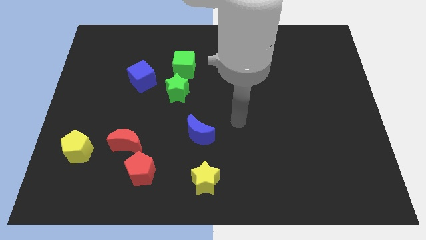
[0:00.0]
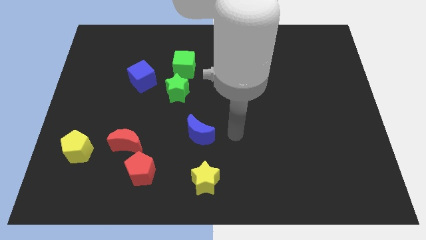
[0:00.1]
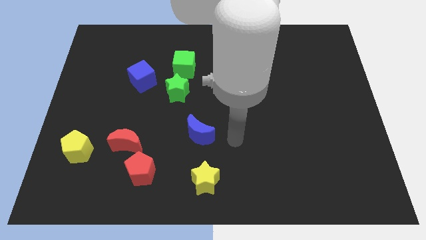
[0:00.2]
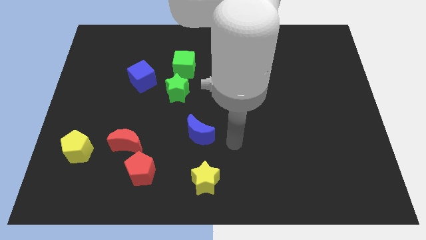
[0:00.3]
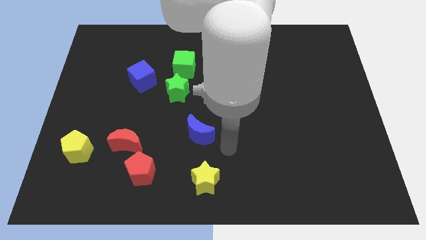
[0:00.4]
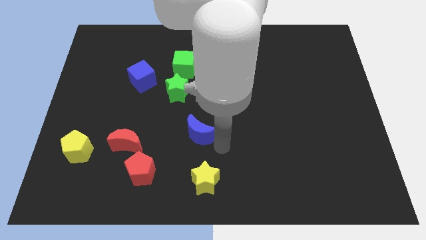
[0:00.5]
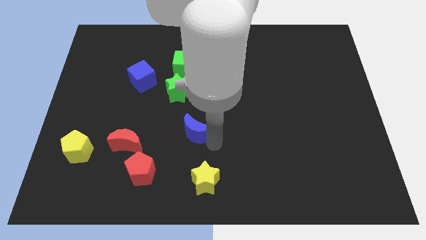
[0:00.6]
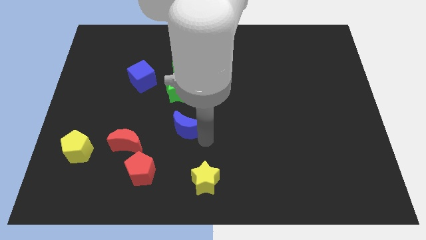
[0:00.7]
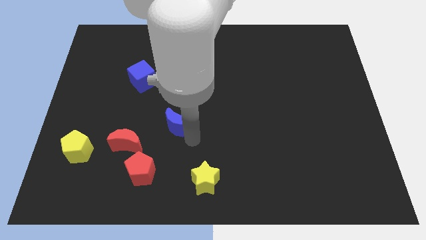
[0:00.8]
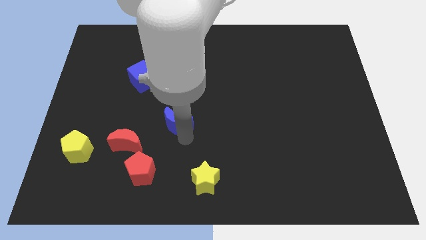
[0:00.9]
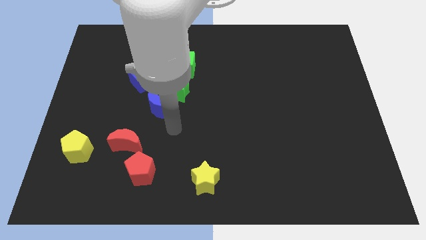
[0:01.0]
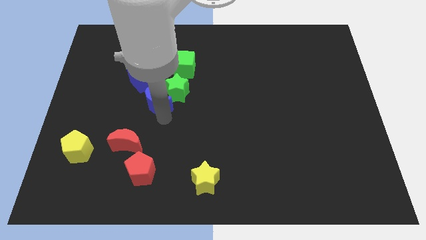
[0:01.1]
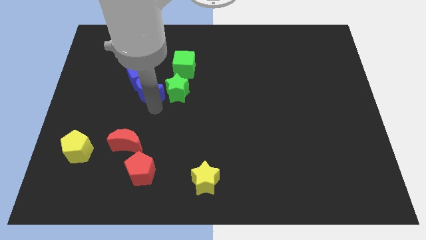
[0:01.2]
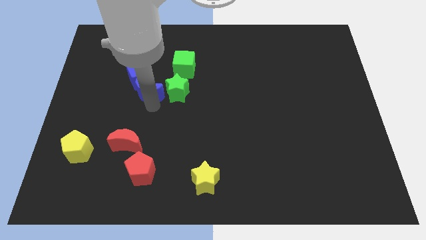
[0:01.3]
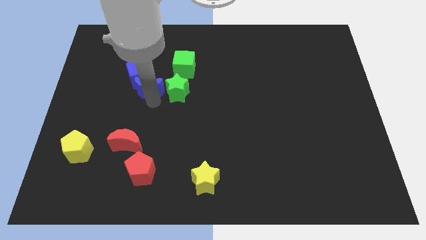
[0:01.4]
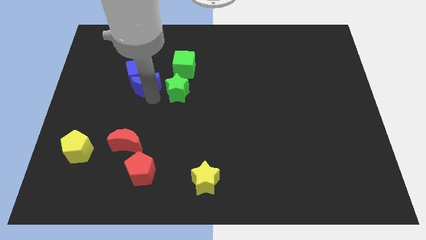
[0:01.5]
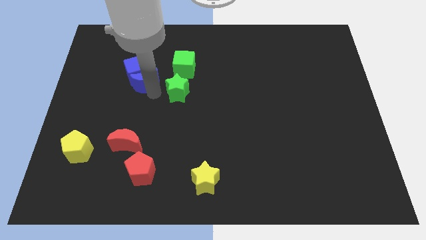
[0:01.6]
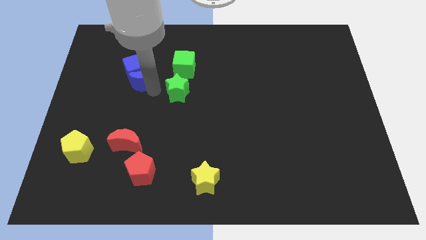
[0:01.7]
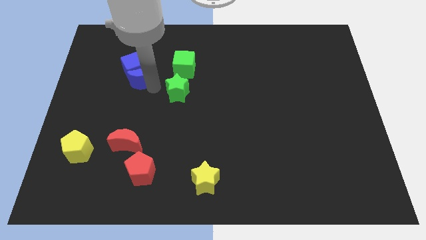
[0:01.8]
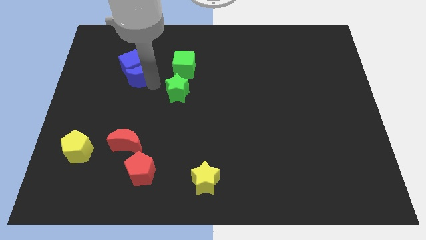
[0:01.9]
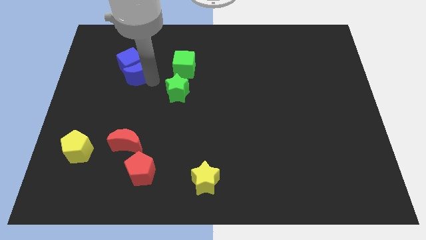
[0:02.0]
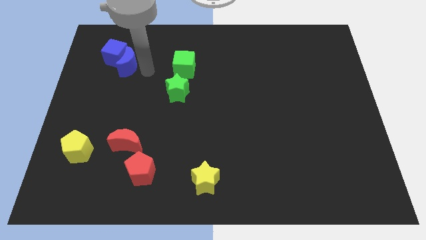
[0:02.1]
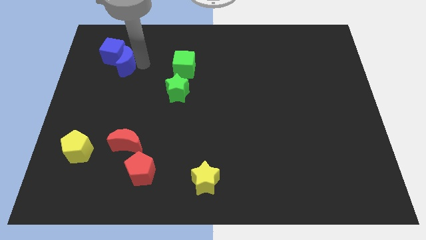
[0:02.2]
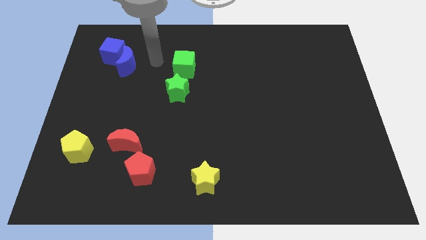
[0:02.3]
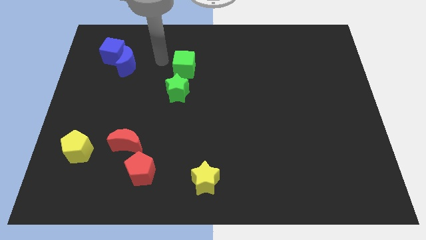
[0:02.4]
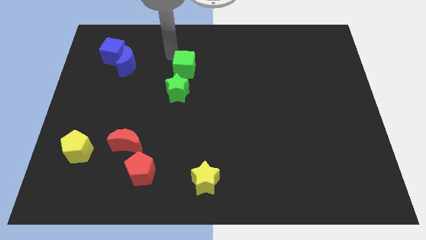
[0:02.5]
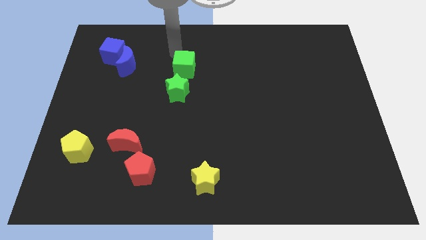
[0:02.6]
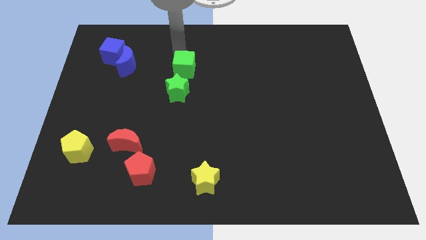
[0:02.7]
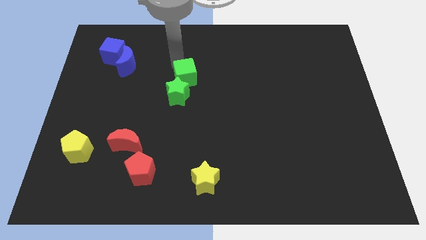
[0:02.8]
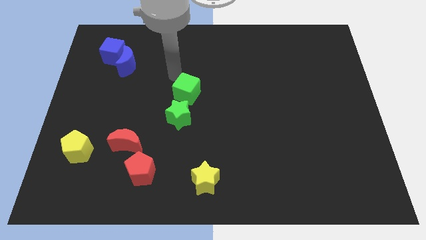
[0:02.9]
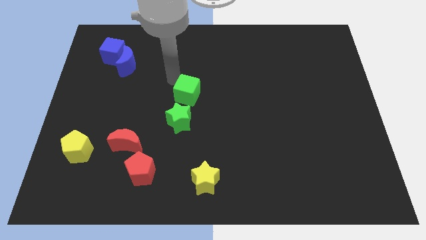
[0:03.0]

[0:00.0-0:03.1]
separate the blue cube from the green star

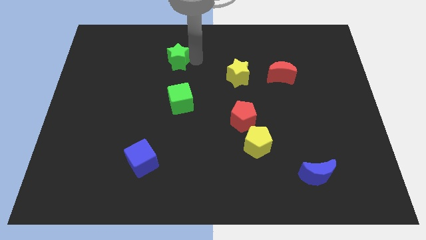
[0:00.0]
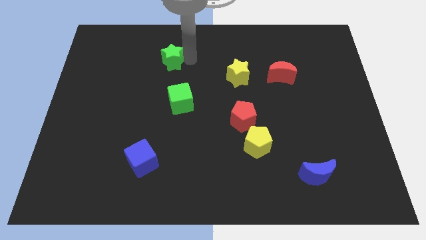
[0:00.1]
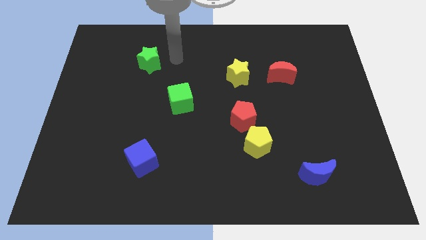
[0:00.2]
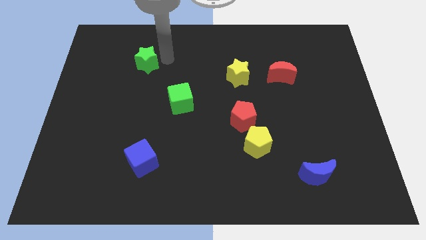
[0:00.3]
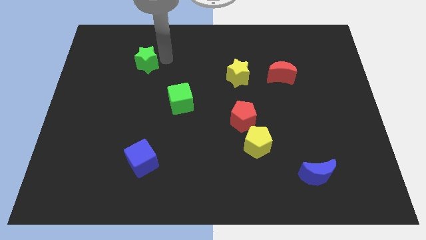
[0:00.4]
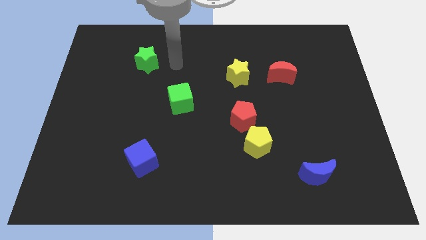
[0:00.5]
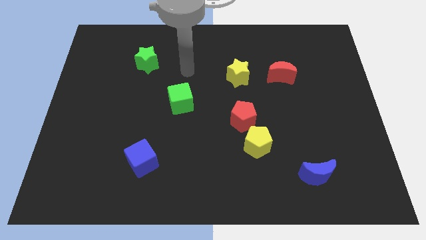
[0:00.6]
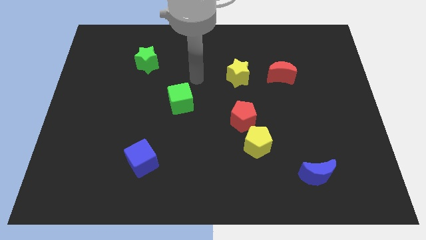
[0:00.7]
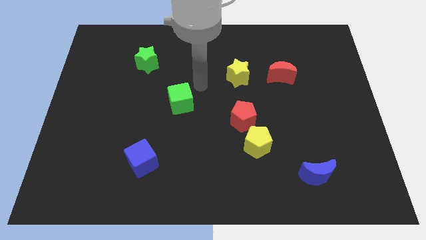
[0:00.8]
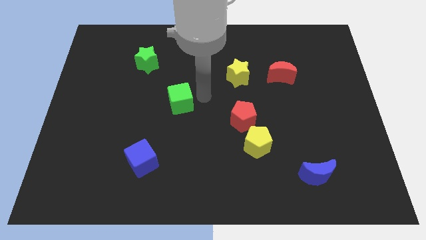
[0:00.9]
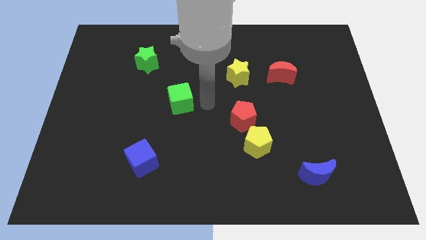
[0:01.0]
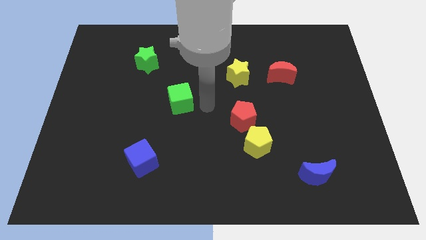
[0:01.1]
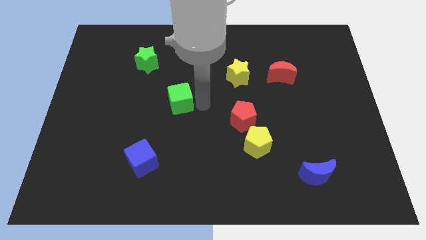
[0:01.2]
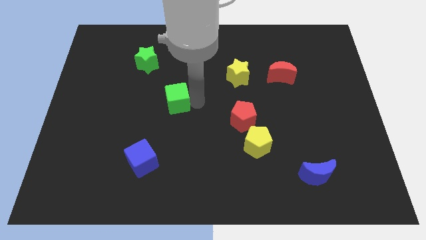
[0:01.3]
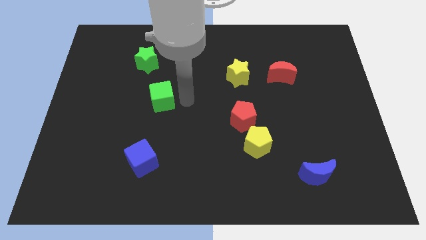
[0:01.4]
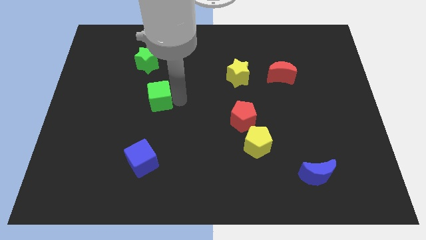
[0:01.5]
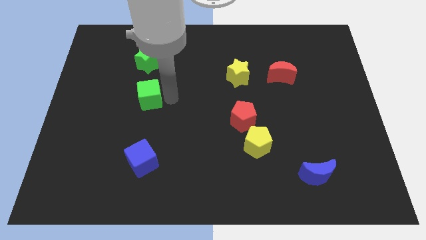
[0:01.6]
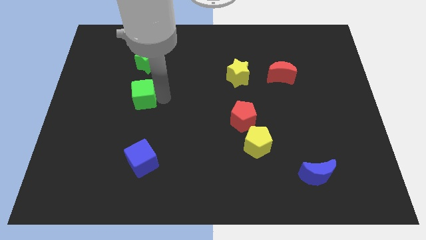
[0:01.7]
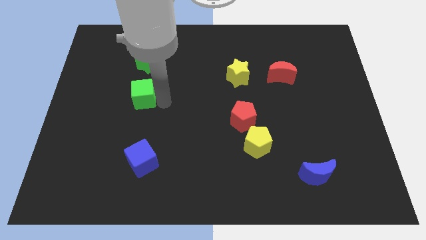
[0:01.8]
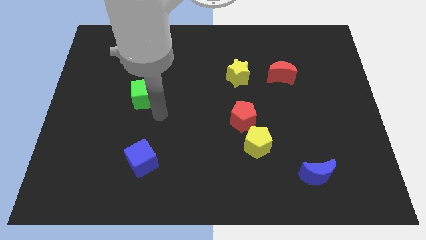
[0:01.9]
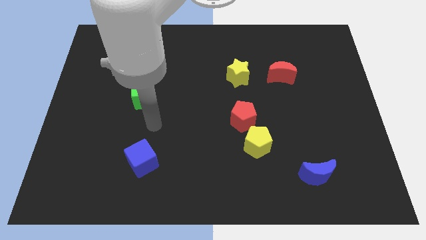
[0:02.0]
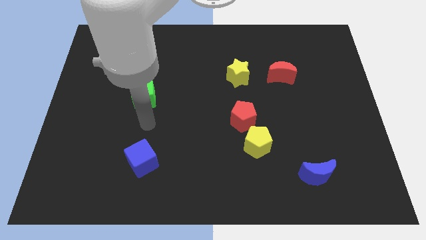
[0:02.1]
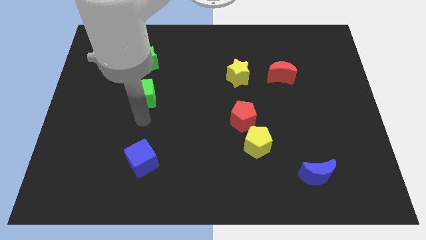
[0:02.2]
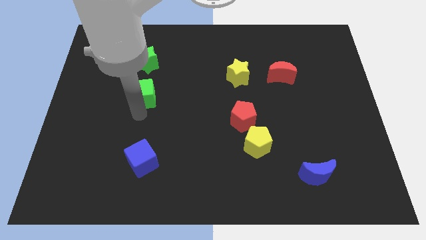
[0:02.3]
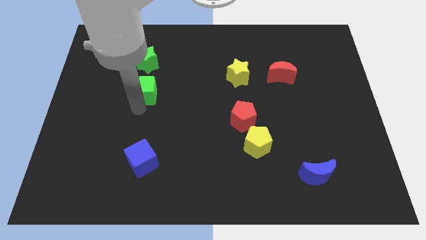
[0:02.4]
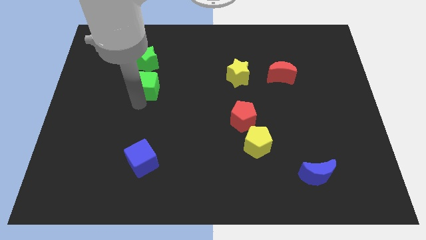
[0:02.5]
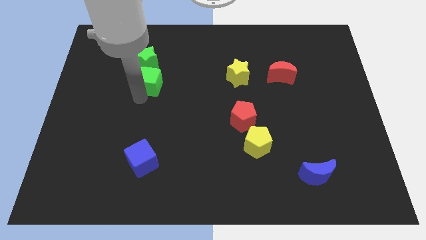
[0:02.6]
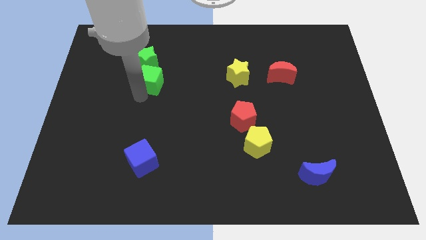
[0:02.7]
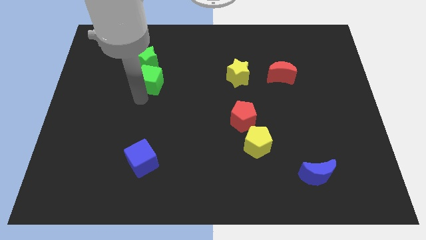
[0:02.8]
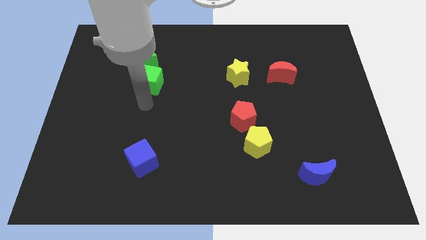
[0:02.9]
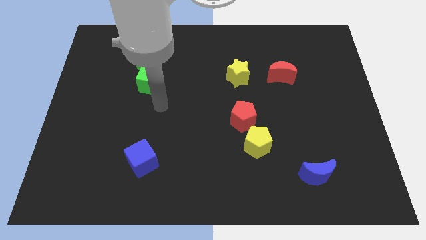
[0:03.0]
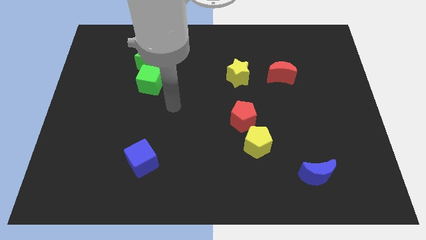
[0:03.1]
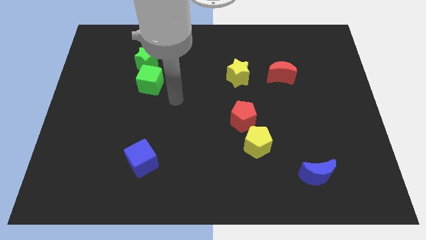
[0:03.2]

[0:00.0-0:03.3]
group up the green blocks at the top side of the blue cube

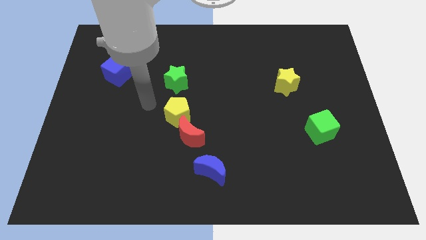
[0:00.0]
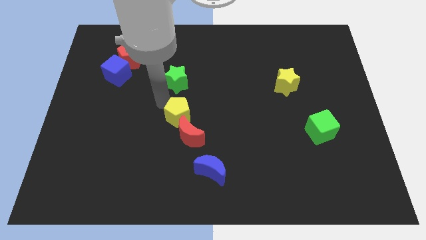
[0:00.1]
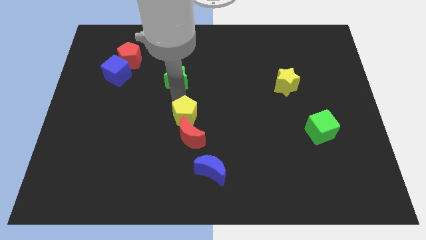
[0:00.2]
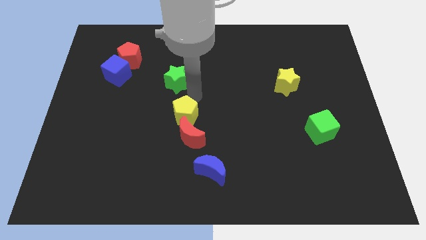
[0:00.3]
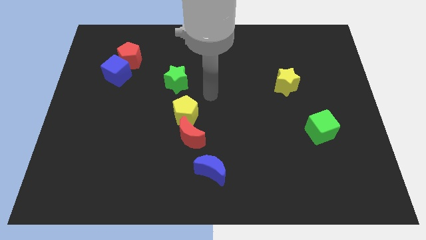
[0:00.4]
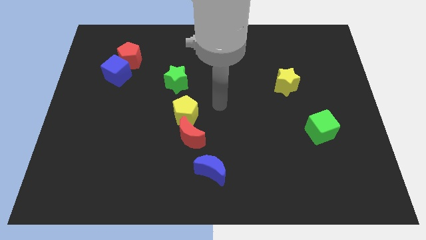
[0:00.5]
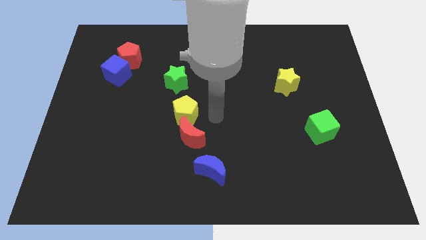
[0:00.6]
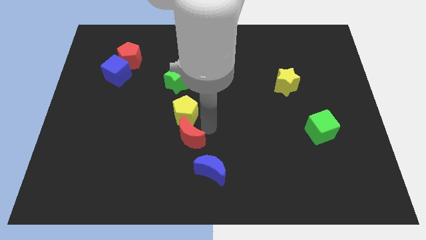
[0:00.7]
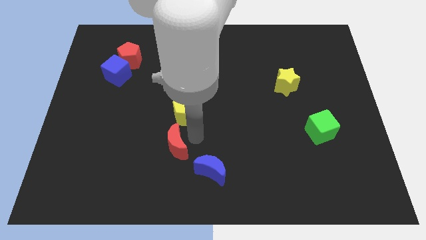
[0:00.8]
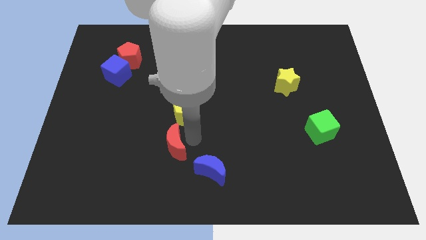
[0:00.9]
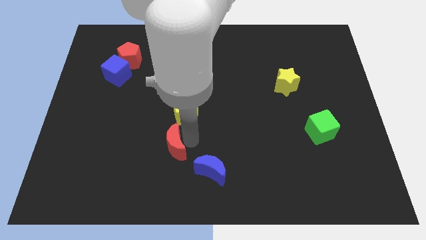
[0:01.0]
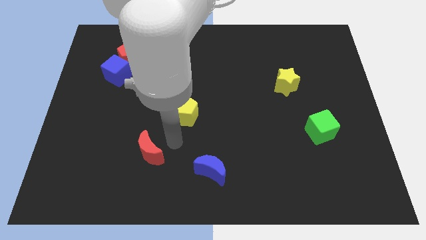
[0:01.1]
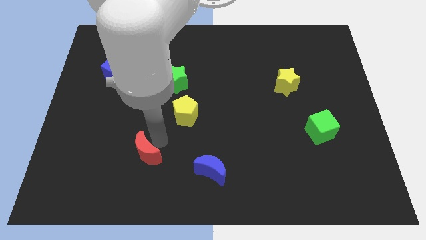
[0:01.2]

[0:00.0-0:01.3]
separate red moon from the yellow pentagon

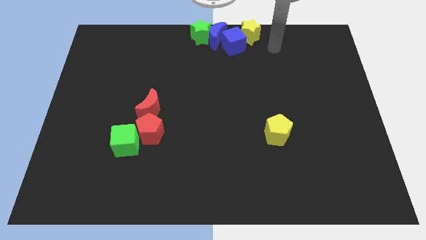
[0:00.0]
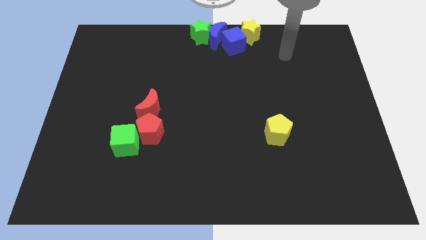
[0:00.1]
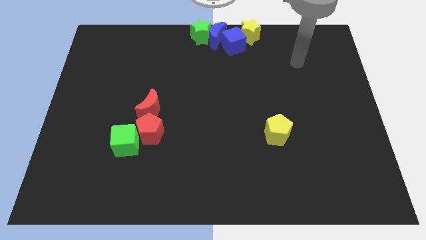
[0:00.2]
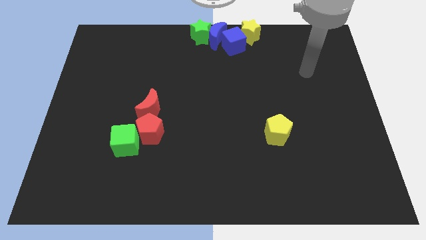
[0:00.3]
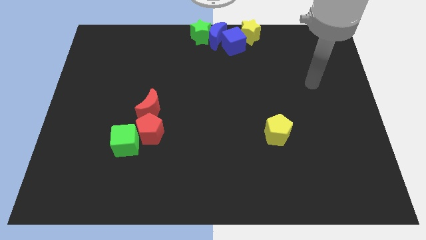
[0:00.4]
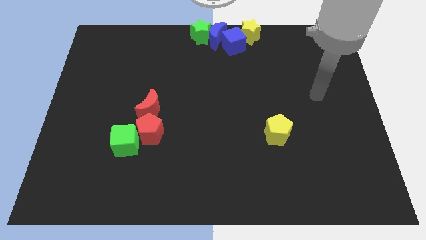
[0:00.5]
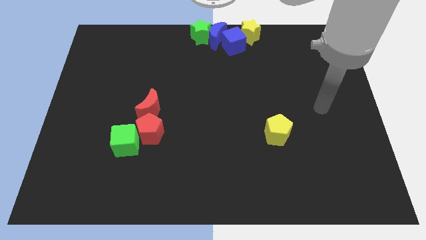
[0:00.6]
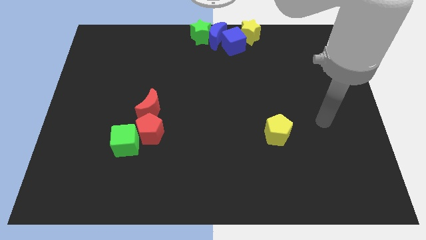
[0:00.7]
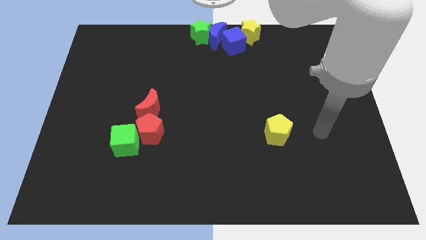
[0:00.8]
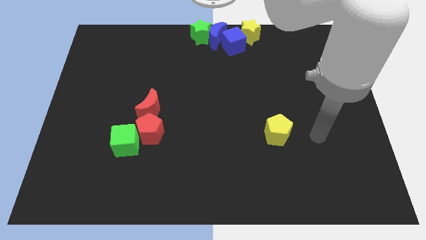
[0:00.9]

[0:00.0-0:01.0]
move your arm away from the yellow star

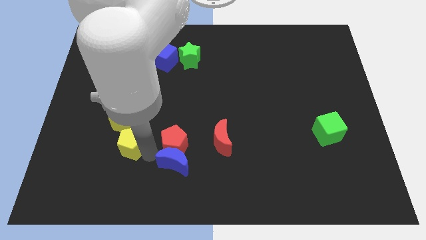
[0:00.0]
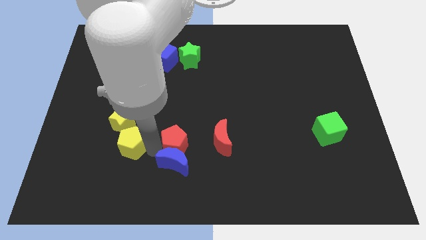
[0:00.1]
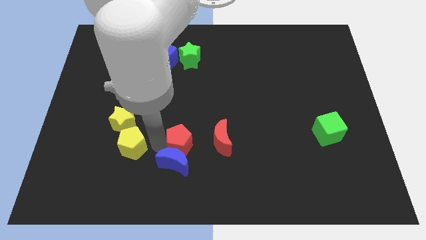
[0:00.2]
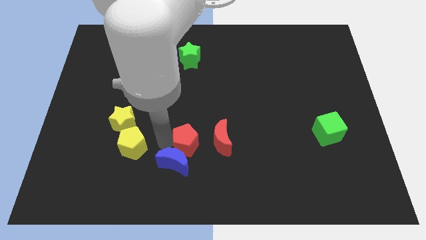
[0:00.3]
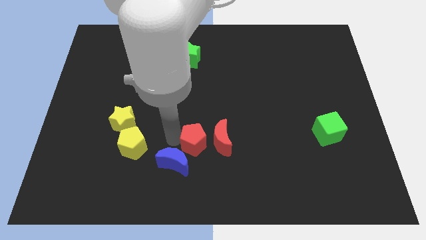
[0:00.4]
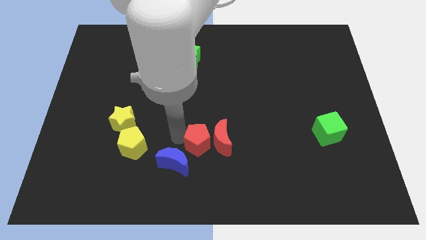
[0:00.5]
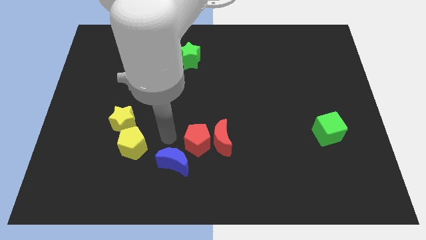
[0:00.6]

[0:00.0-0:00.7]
place the red pentagon to the left side of red moon
